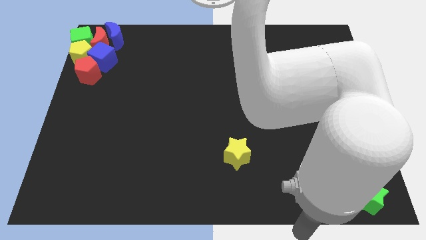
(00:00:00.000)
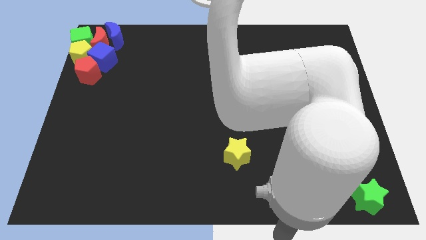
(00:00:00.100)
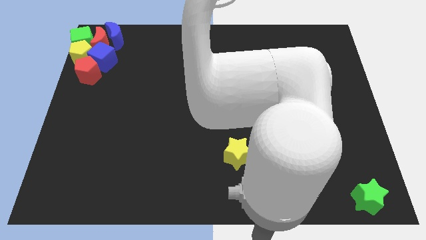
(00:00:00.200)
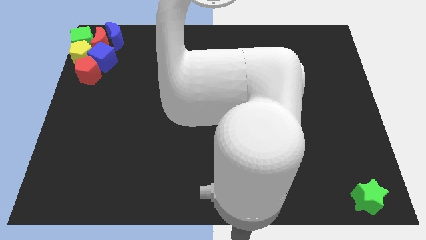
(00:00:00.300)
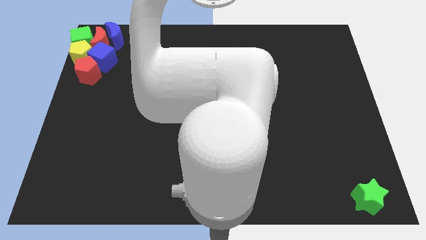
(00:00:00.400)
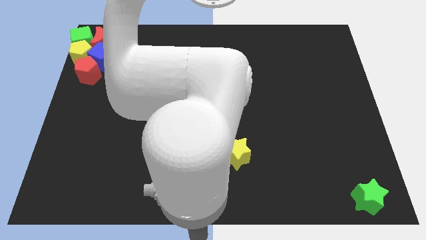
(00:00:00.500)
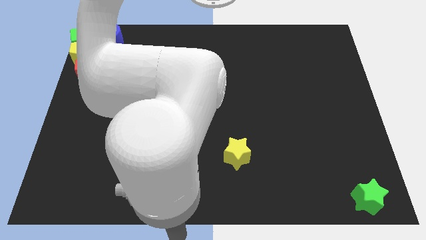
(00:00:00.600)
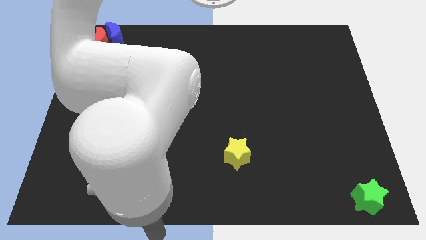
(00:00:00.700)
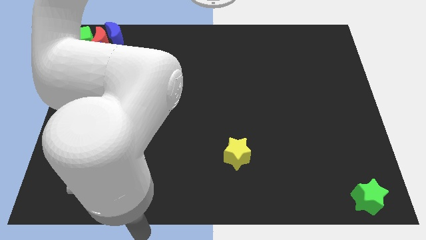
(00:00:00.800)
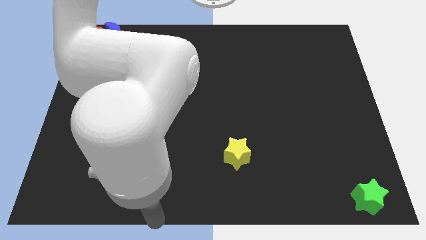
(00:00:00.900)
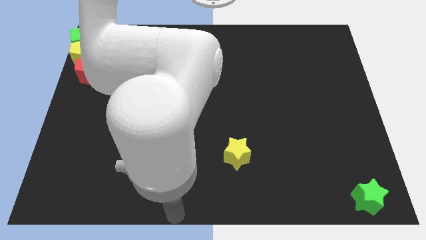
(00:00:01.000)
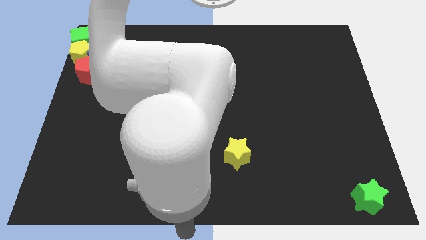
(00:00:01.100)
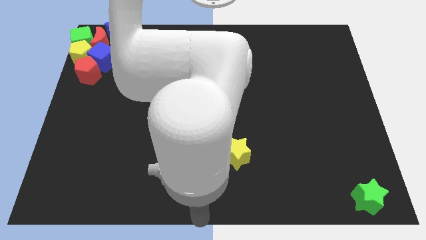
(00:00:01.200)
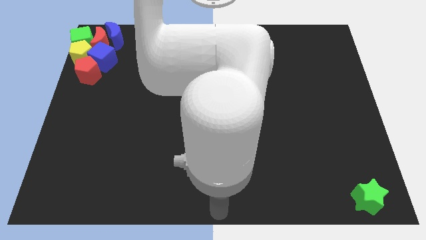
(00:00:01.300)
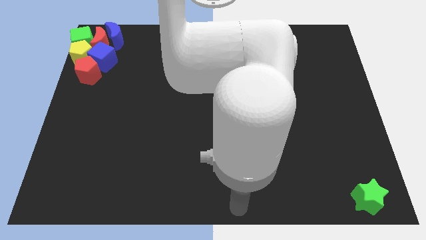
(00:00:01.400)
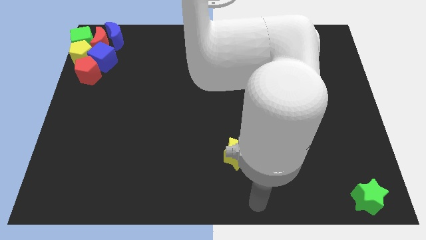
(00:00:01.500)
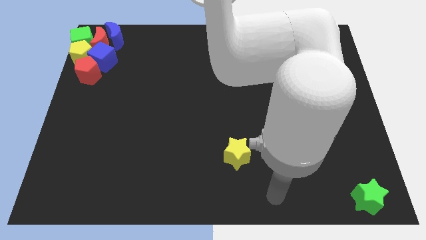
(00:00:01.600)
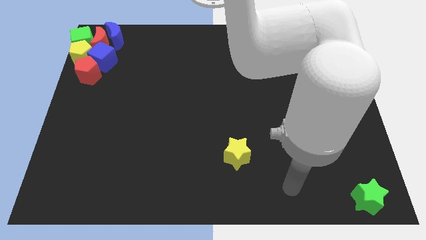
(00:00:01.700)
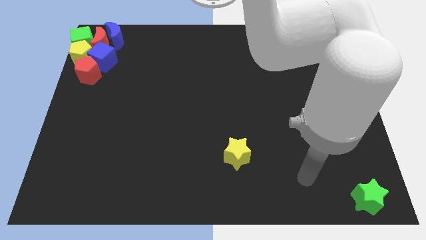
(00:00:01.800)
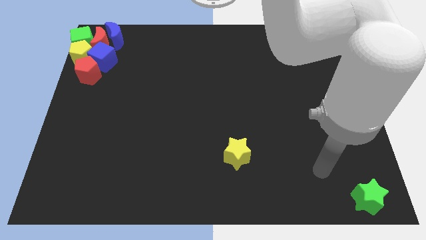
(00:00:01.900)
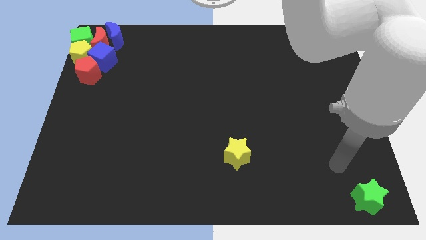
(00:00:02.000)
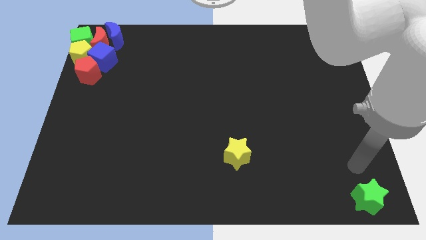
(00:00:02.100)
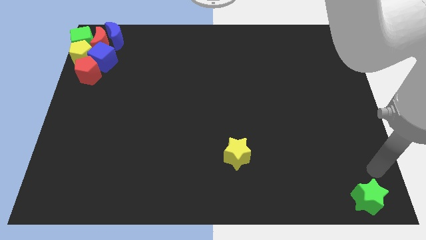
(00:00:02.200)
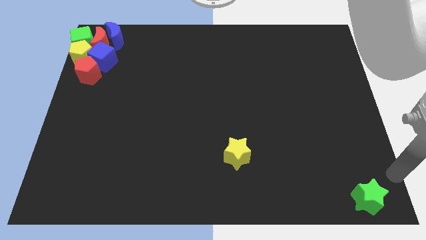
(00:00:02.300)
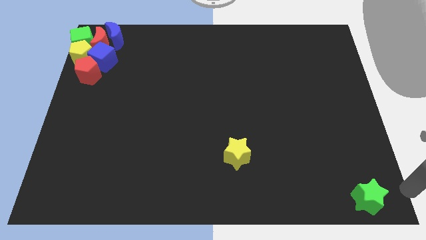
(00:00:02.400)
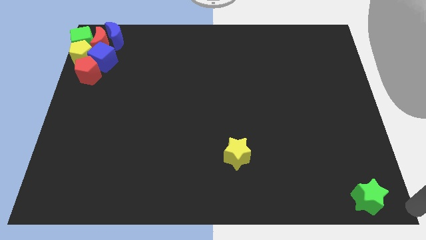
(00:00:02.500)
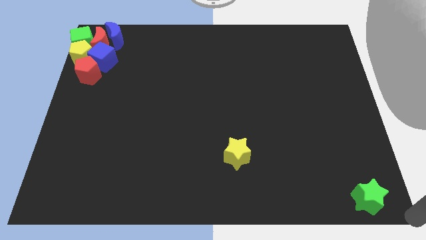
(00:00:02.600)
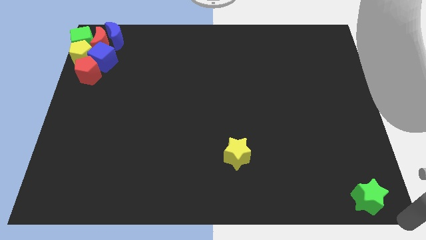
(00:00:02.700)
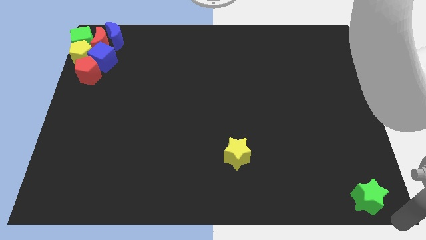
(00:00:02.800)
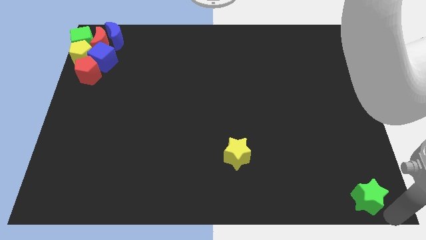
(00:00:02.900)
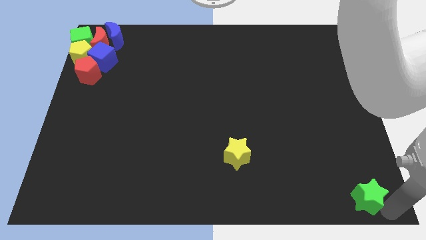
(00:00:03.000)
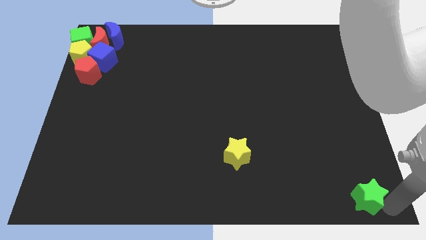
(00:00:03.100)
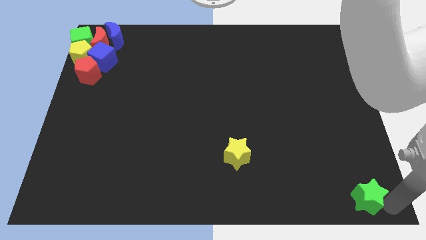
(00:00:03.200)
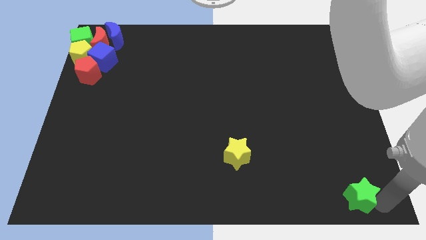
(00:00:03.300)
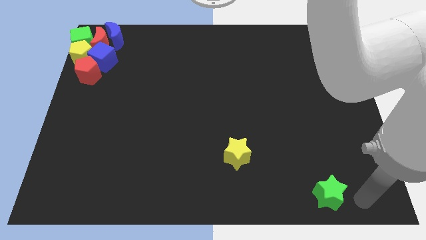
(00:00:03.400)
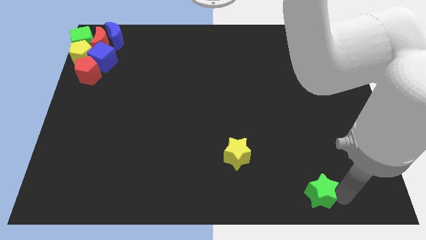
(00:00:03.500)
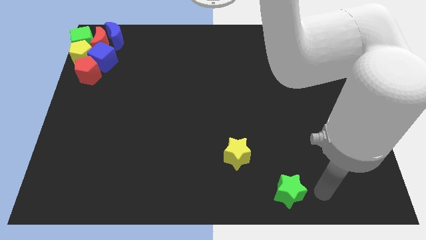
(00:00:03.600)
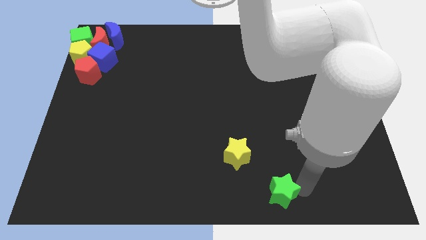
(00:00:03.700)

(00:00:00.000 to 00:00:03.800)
move the green star slightly to the left

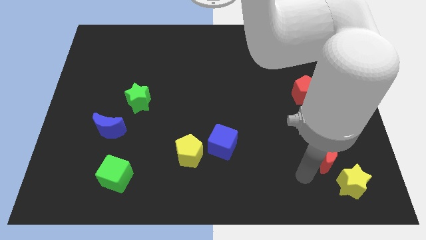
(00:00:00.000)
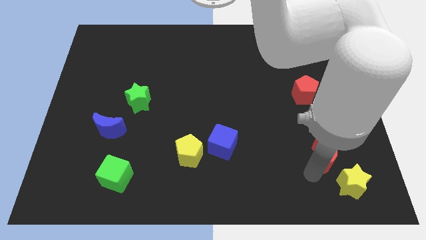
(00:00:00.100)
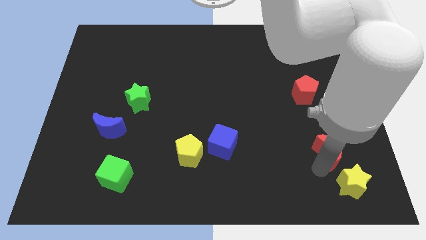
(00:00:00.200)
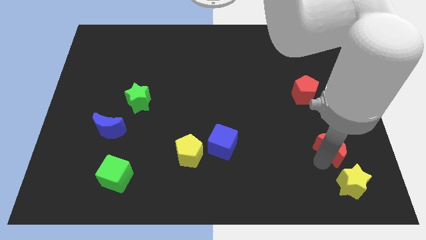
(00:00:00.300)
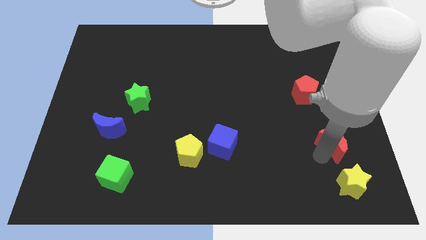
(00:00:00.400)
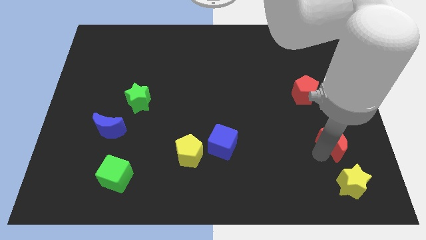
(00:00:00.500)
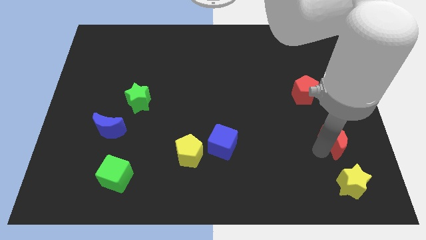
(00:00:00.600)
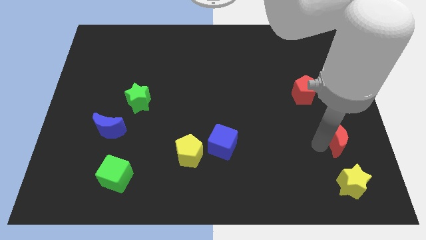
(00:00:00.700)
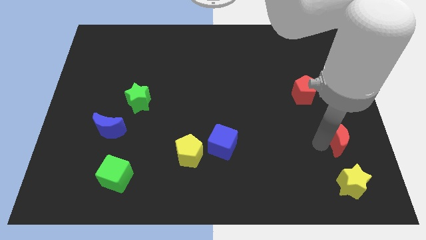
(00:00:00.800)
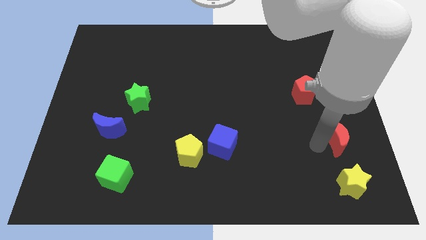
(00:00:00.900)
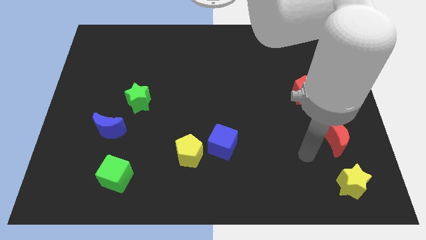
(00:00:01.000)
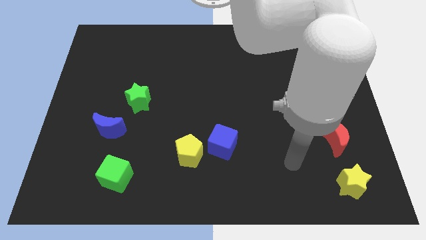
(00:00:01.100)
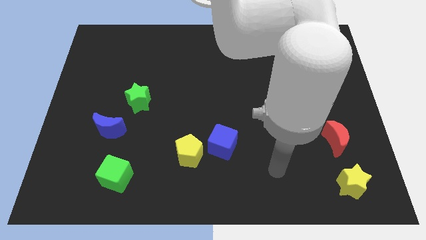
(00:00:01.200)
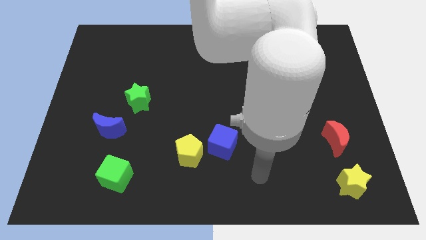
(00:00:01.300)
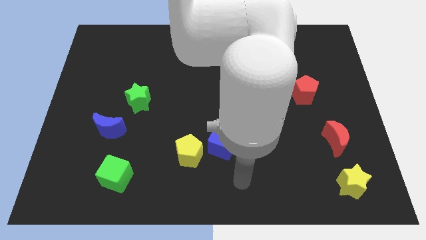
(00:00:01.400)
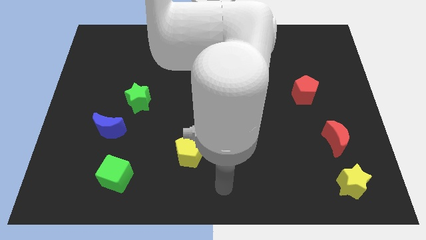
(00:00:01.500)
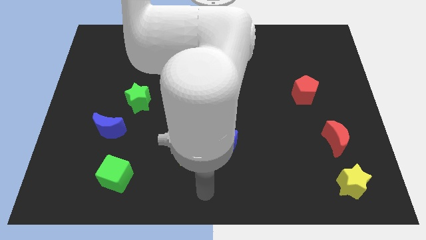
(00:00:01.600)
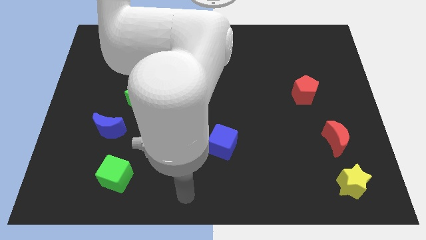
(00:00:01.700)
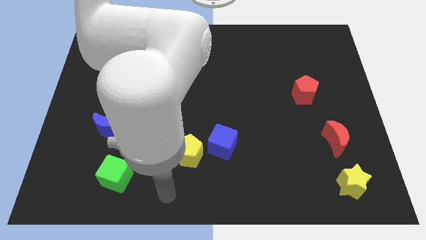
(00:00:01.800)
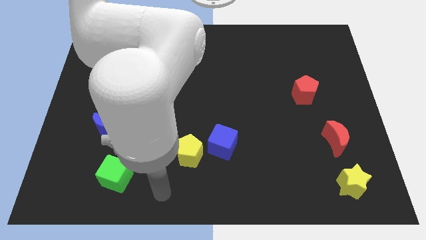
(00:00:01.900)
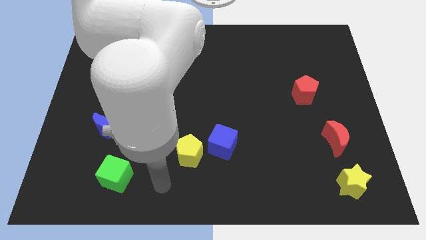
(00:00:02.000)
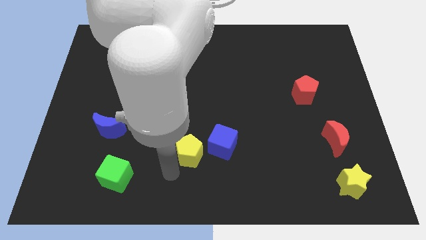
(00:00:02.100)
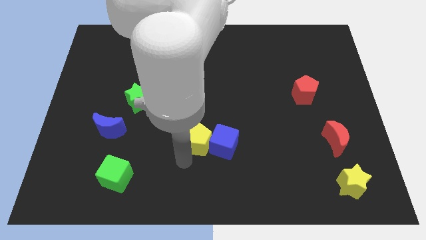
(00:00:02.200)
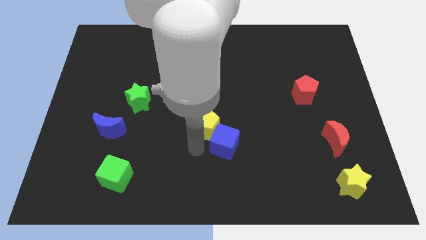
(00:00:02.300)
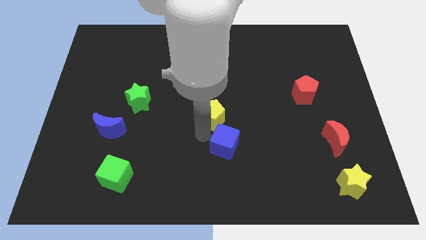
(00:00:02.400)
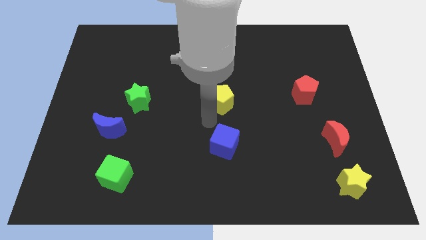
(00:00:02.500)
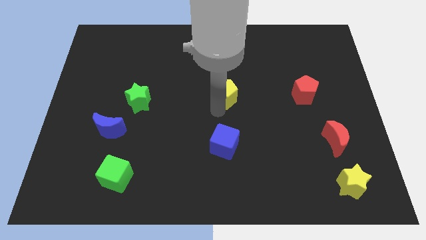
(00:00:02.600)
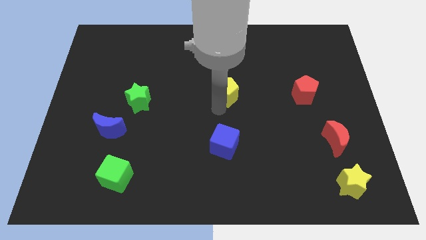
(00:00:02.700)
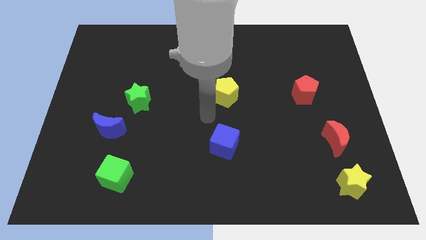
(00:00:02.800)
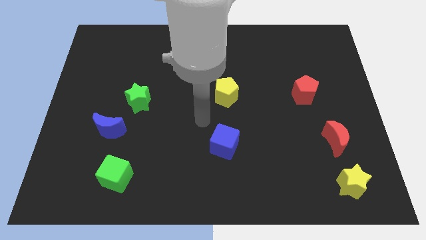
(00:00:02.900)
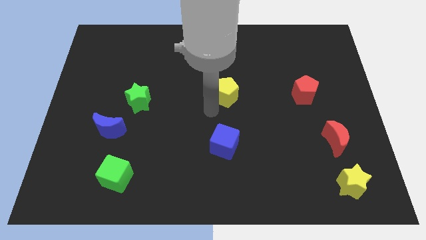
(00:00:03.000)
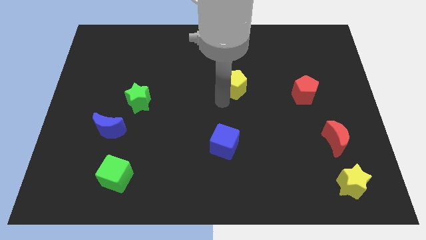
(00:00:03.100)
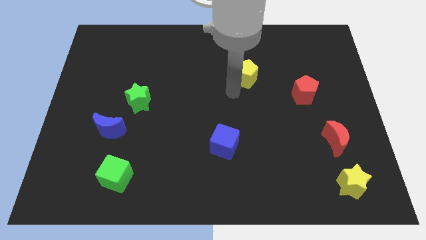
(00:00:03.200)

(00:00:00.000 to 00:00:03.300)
push the yellow pentagon towards the center of the board

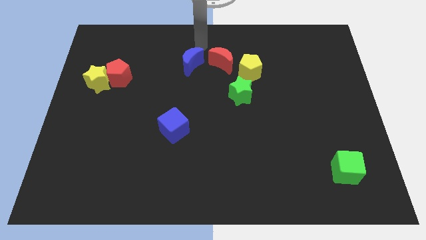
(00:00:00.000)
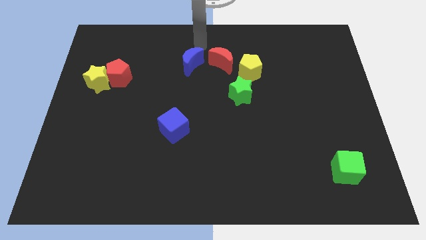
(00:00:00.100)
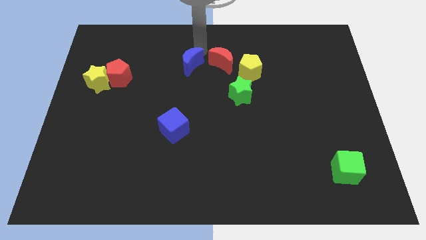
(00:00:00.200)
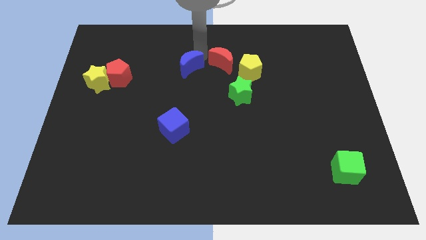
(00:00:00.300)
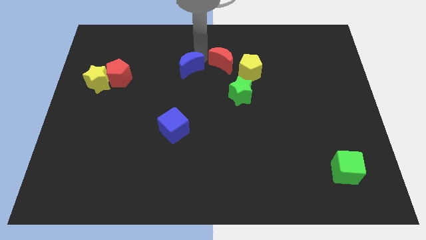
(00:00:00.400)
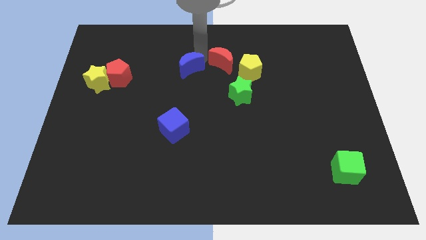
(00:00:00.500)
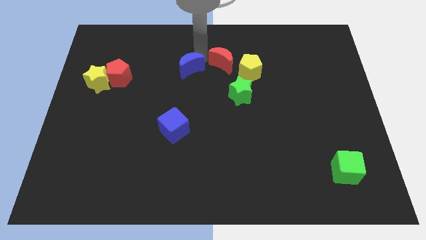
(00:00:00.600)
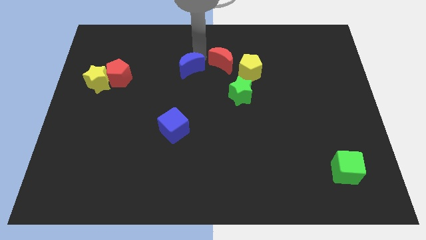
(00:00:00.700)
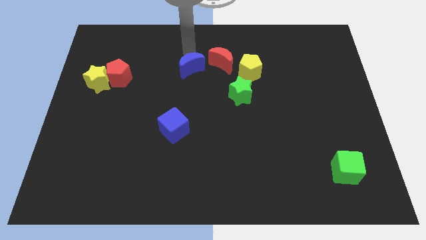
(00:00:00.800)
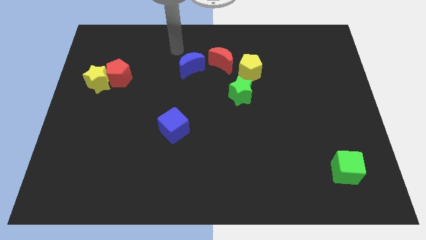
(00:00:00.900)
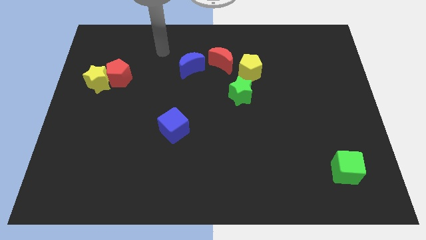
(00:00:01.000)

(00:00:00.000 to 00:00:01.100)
push the blue moon downwards slightly

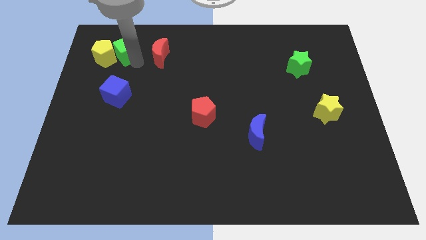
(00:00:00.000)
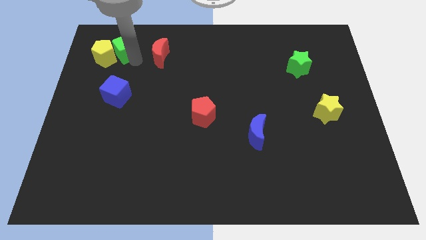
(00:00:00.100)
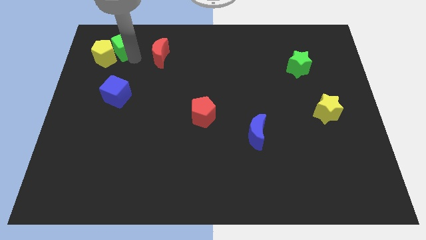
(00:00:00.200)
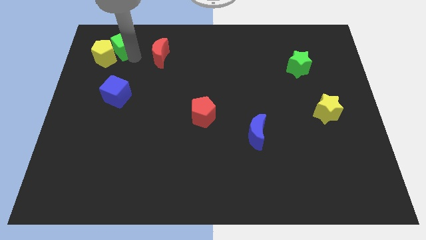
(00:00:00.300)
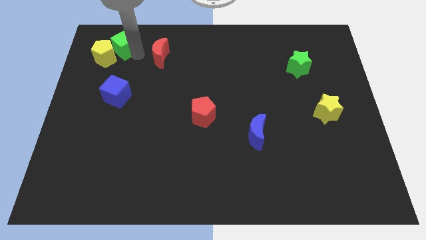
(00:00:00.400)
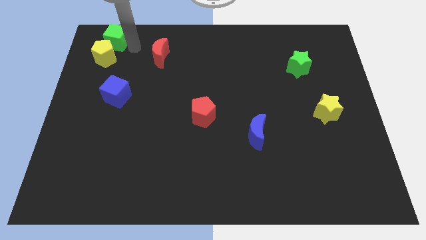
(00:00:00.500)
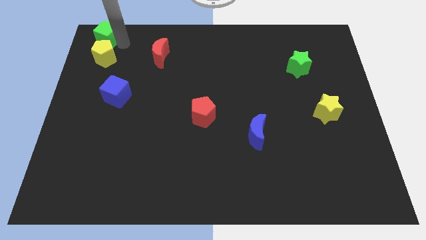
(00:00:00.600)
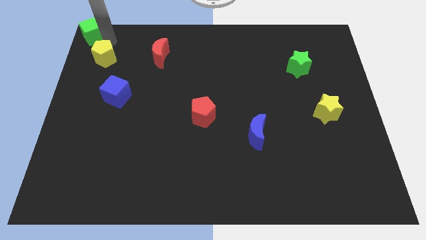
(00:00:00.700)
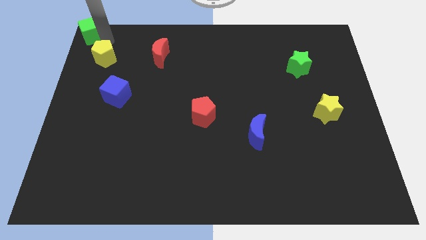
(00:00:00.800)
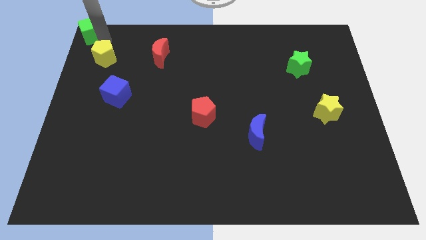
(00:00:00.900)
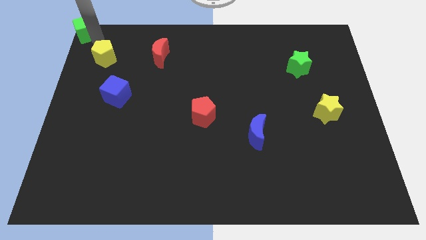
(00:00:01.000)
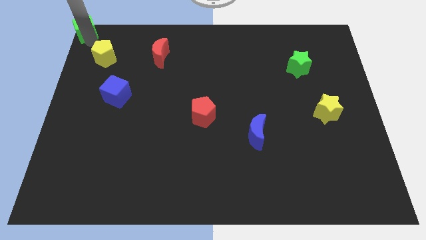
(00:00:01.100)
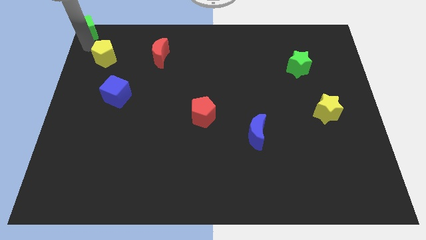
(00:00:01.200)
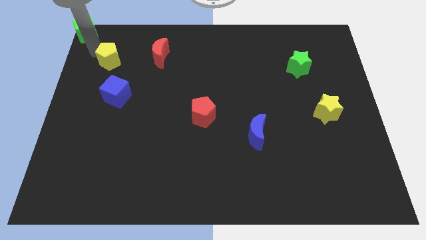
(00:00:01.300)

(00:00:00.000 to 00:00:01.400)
push the green cube to top left corner of the board
